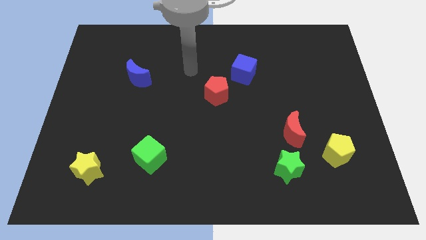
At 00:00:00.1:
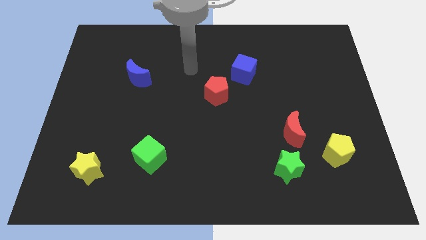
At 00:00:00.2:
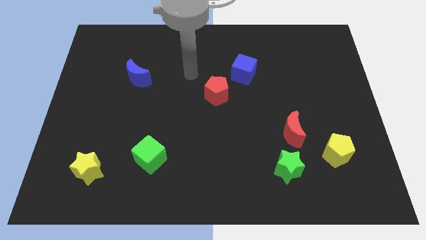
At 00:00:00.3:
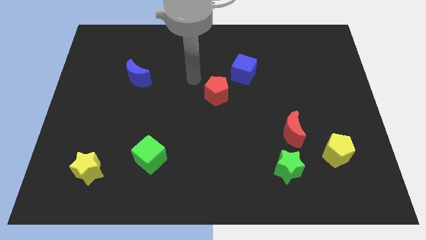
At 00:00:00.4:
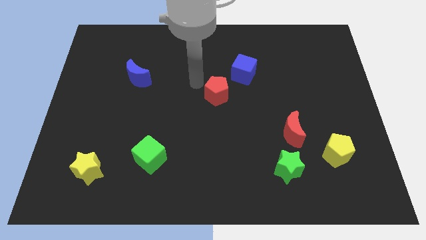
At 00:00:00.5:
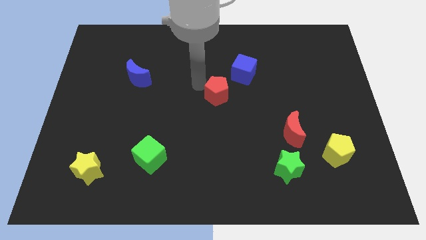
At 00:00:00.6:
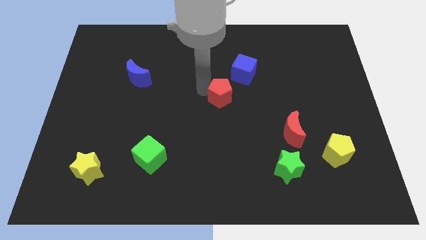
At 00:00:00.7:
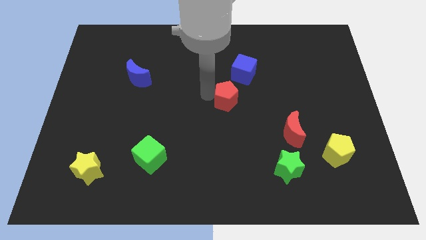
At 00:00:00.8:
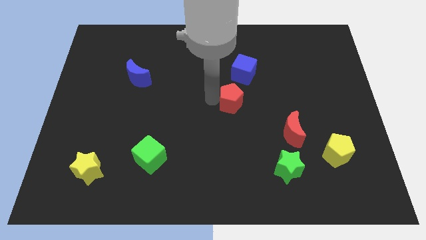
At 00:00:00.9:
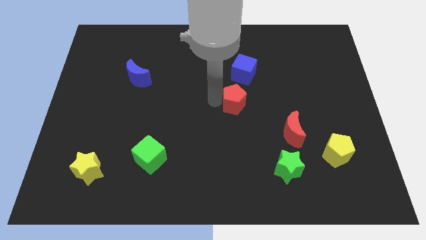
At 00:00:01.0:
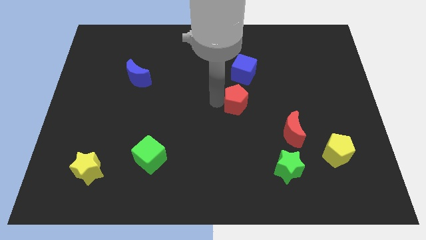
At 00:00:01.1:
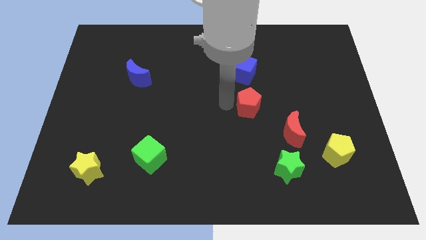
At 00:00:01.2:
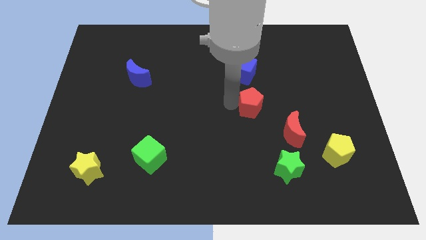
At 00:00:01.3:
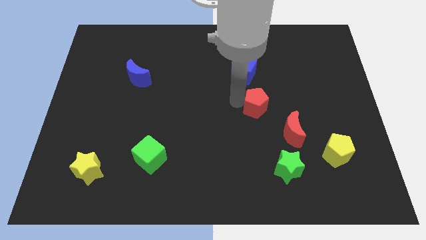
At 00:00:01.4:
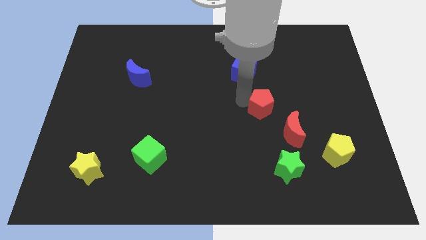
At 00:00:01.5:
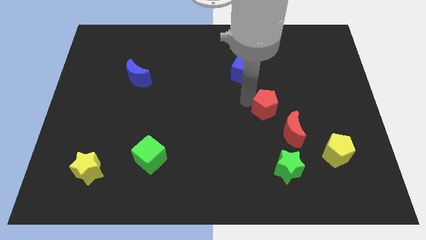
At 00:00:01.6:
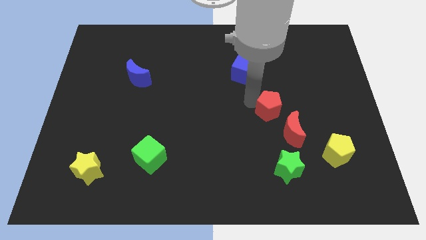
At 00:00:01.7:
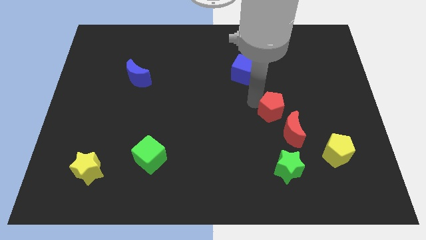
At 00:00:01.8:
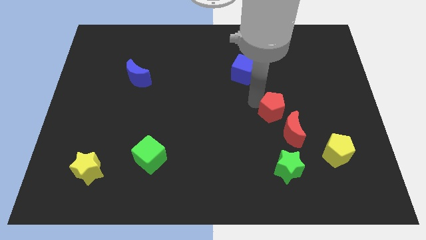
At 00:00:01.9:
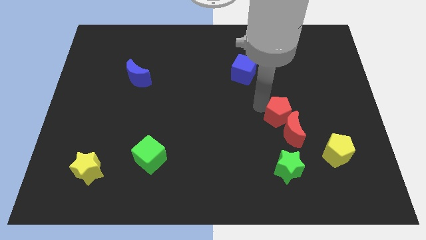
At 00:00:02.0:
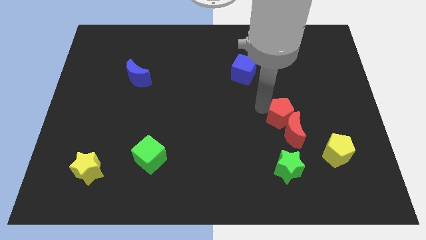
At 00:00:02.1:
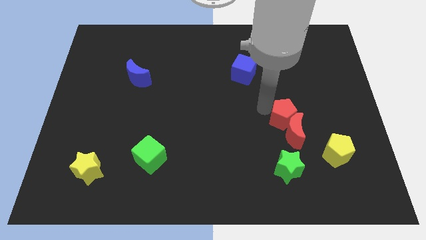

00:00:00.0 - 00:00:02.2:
put the red pentagon next to the red moon

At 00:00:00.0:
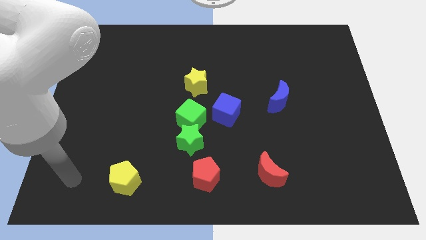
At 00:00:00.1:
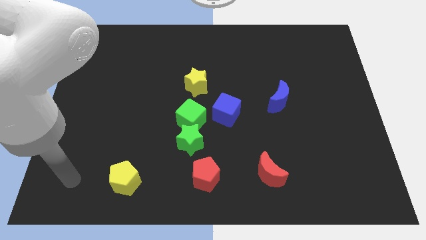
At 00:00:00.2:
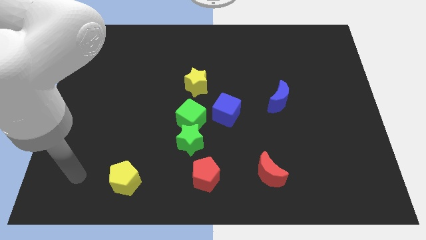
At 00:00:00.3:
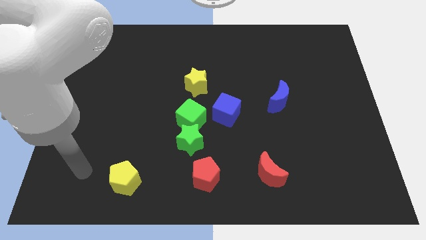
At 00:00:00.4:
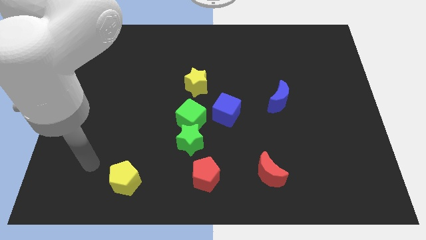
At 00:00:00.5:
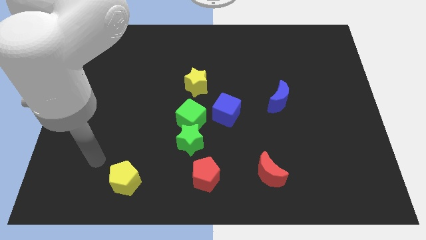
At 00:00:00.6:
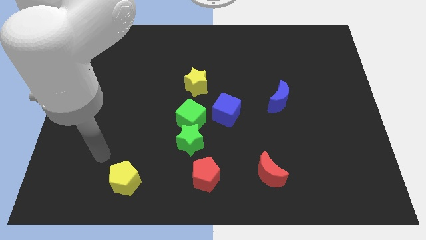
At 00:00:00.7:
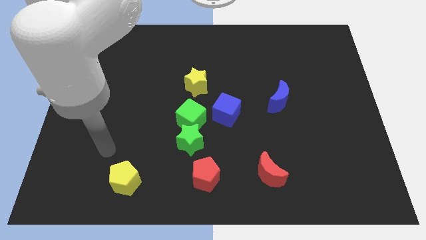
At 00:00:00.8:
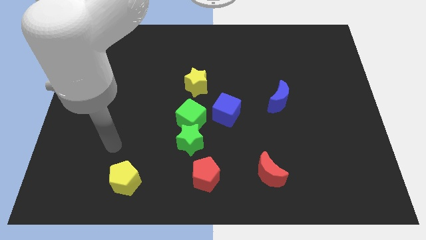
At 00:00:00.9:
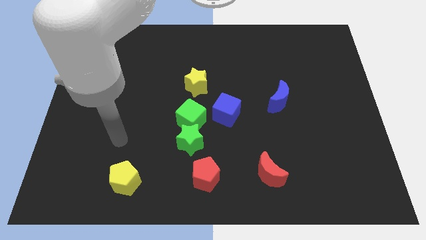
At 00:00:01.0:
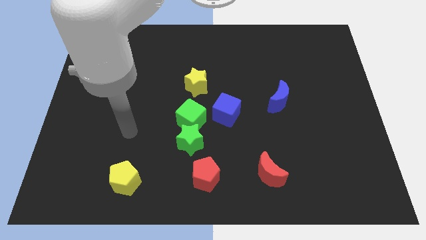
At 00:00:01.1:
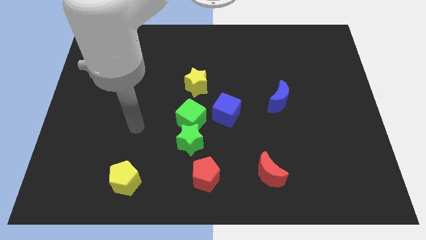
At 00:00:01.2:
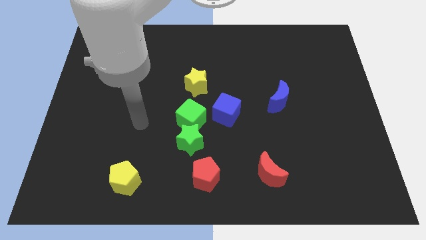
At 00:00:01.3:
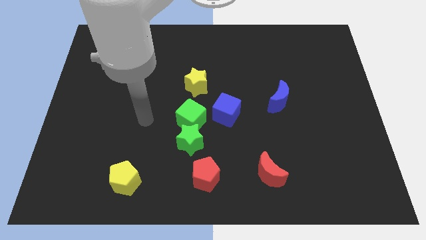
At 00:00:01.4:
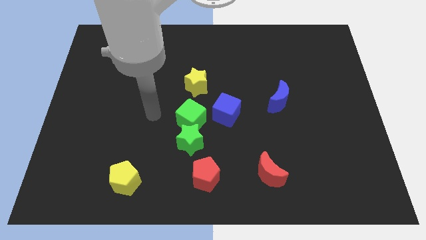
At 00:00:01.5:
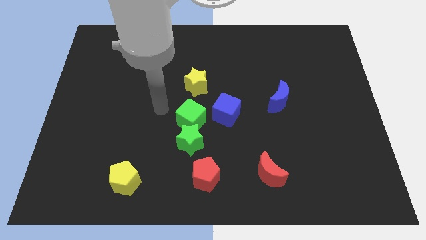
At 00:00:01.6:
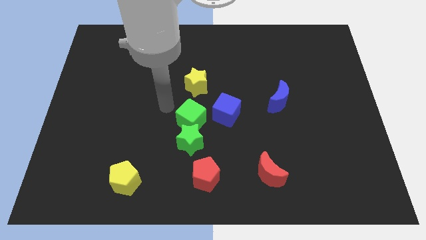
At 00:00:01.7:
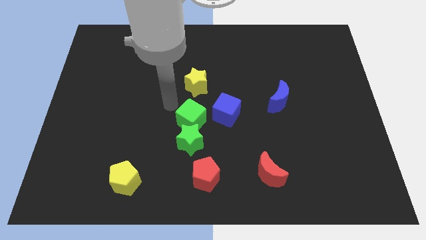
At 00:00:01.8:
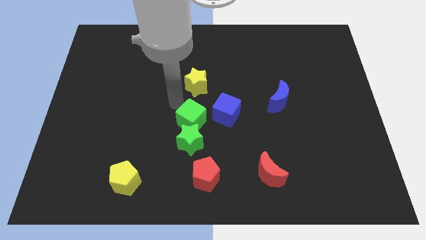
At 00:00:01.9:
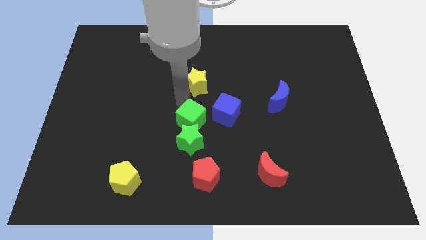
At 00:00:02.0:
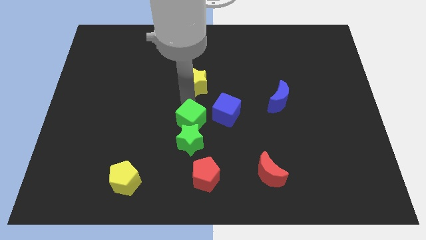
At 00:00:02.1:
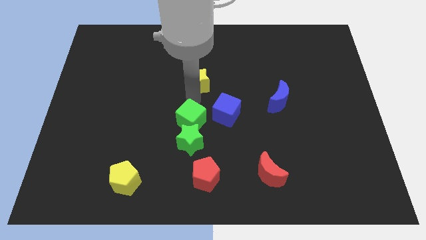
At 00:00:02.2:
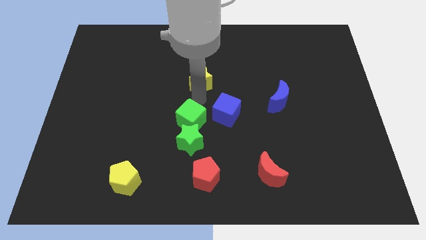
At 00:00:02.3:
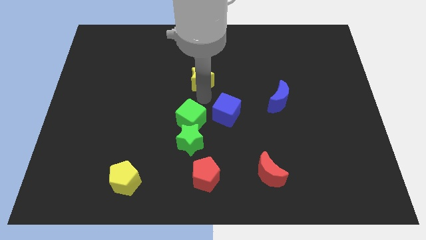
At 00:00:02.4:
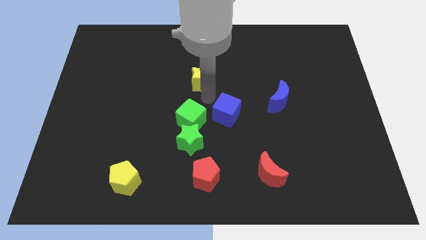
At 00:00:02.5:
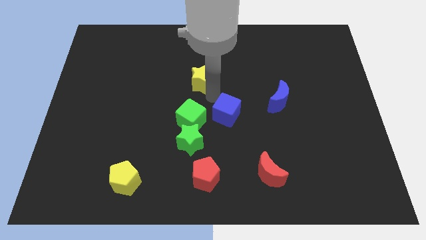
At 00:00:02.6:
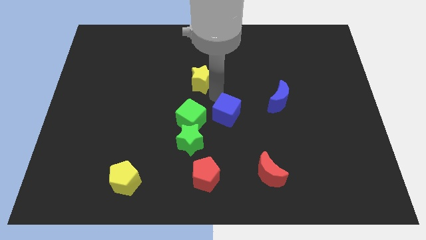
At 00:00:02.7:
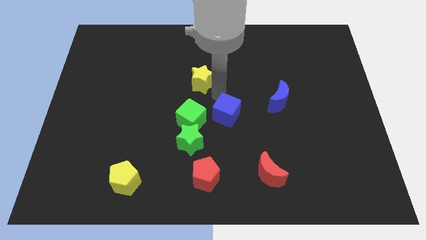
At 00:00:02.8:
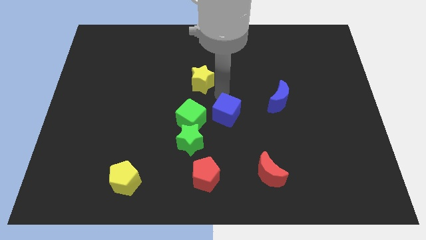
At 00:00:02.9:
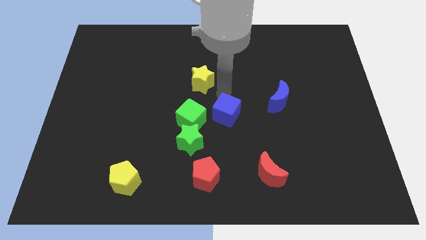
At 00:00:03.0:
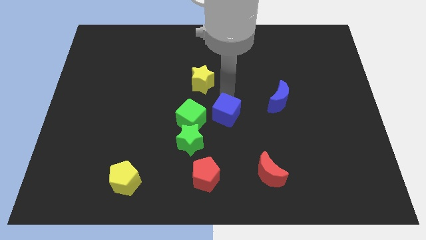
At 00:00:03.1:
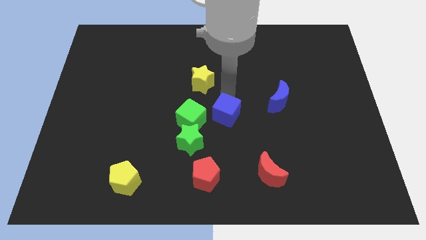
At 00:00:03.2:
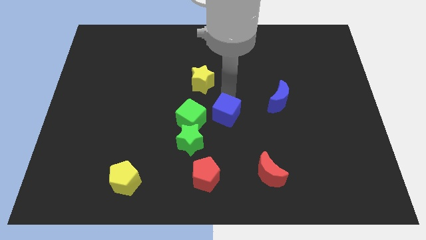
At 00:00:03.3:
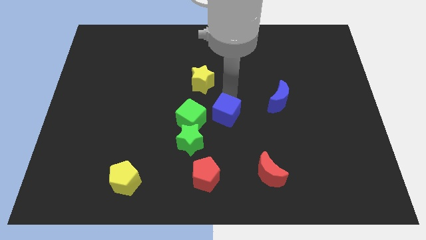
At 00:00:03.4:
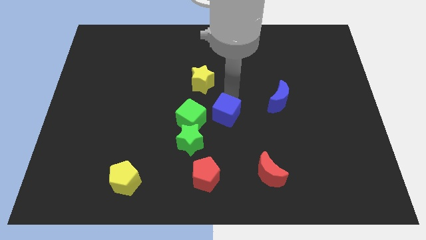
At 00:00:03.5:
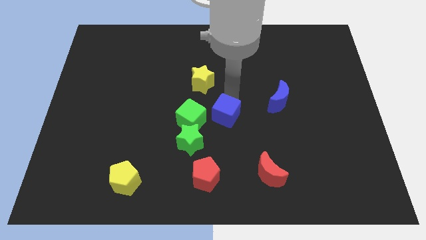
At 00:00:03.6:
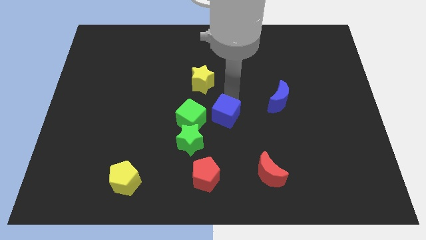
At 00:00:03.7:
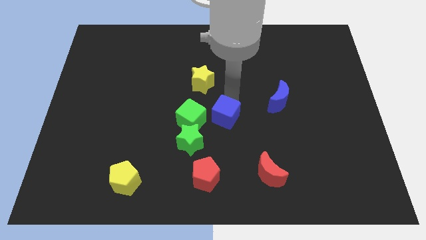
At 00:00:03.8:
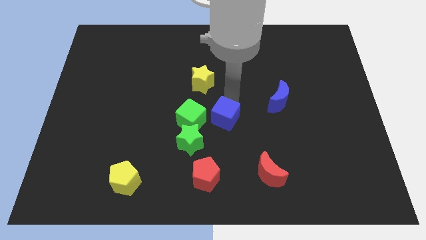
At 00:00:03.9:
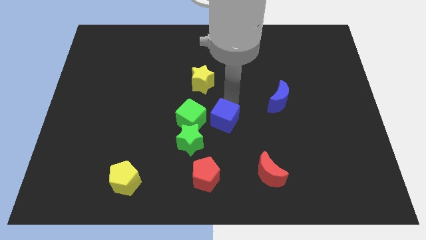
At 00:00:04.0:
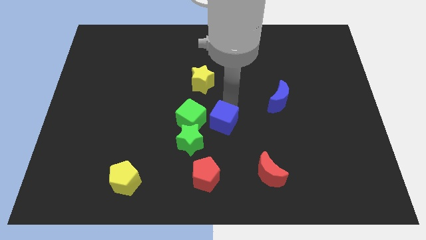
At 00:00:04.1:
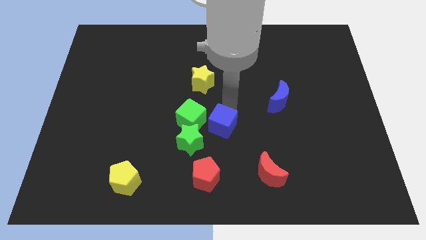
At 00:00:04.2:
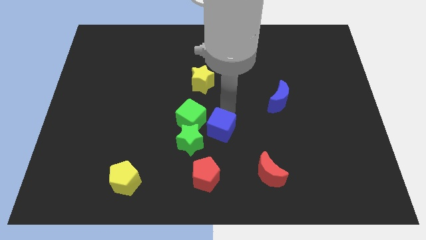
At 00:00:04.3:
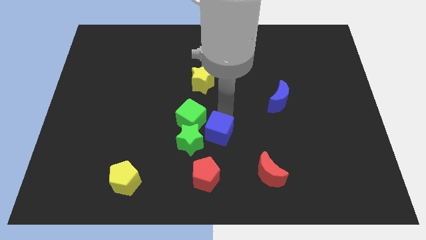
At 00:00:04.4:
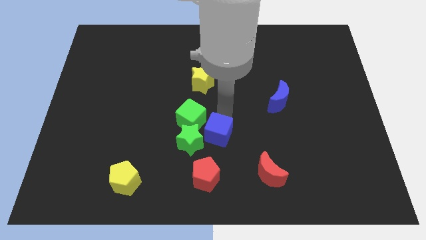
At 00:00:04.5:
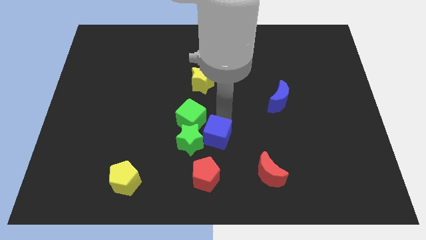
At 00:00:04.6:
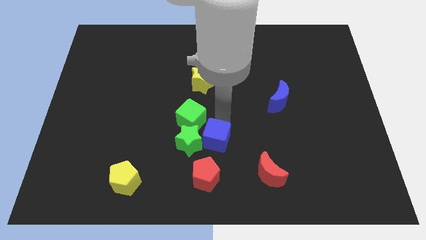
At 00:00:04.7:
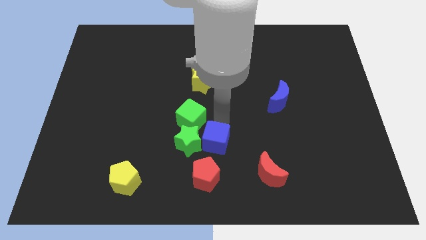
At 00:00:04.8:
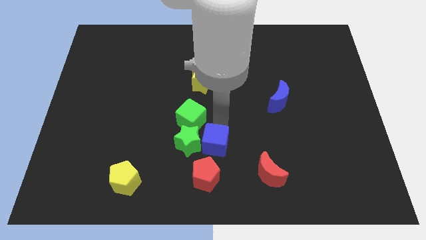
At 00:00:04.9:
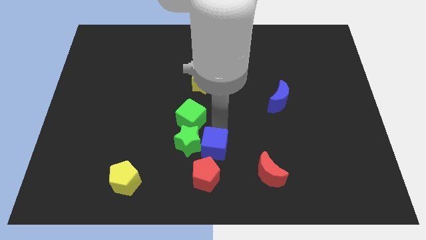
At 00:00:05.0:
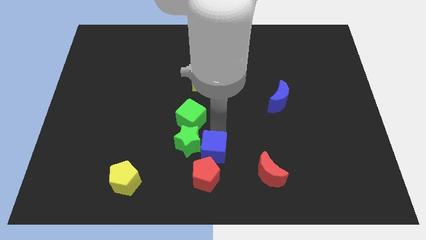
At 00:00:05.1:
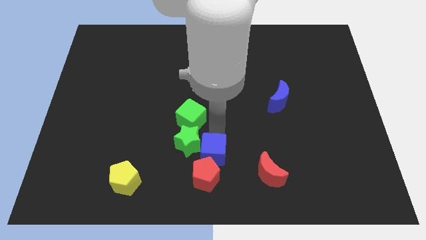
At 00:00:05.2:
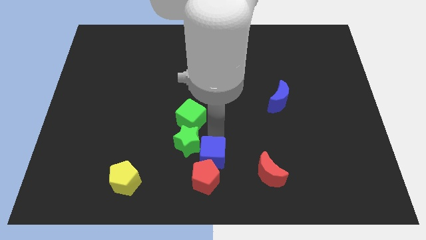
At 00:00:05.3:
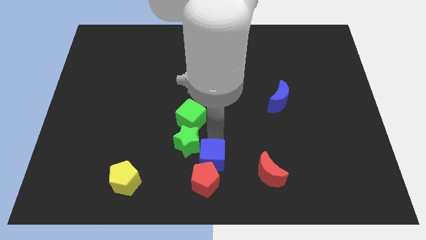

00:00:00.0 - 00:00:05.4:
push the blue cube close to the red pentagon

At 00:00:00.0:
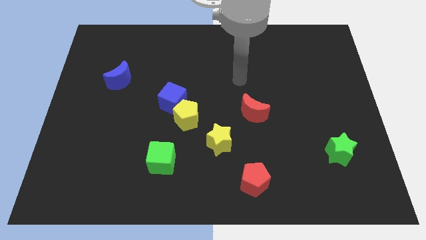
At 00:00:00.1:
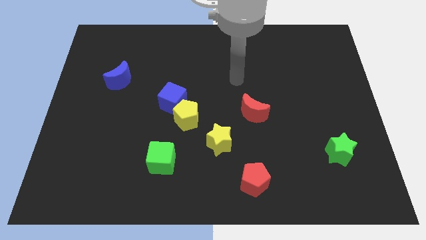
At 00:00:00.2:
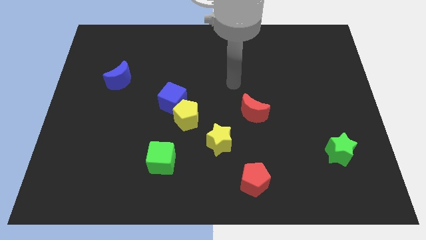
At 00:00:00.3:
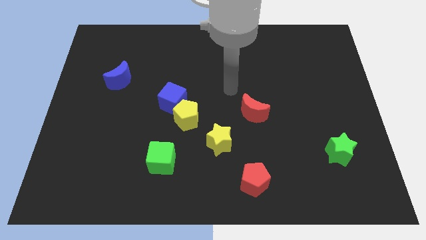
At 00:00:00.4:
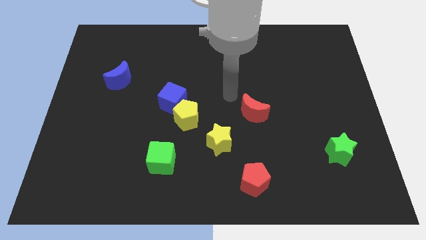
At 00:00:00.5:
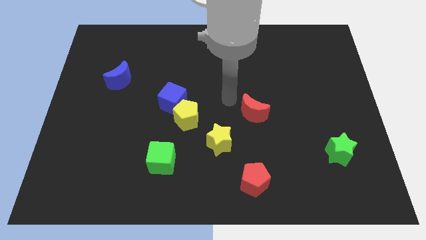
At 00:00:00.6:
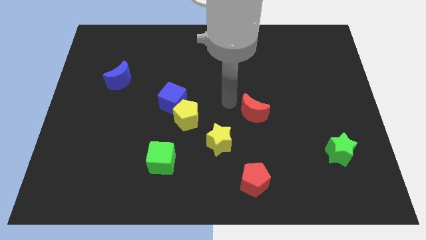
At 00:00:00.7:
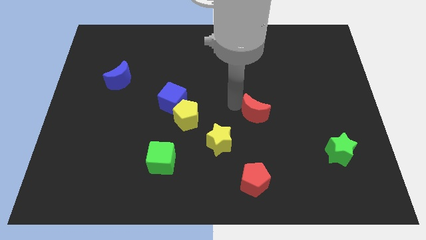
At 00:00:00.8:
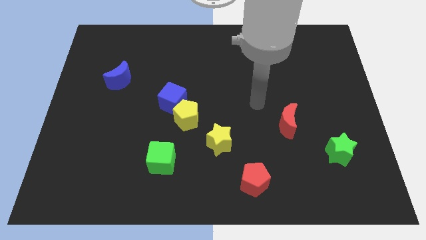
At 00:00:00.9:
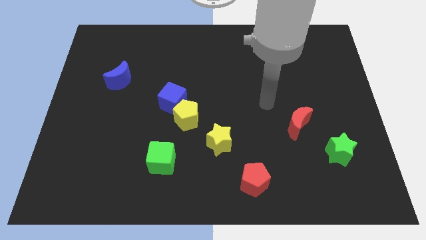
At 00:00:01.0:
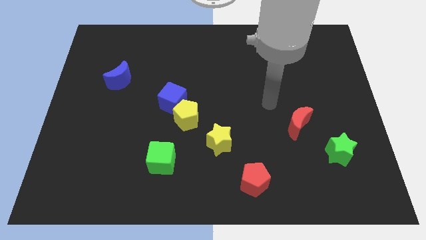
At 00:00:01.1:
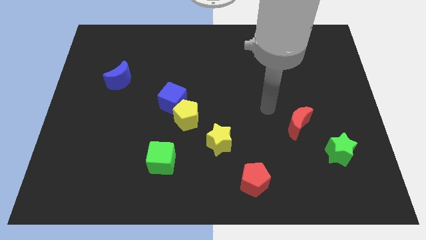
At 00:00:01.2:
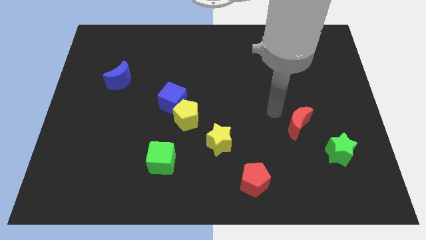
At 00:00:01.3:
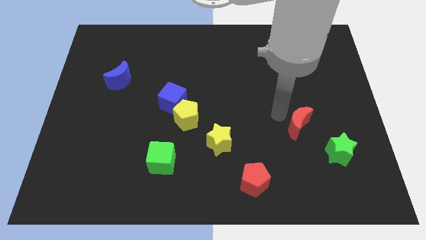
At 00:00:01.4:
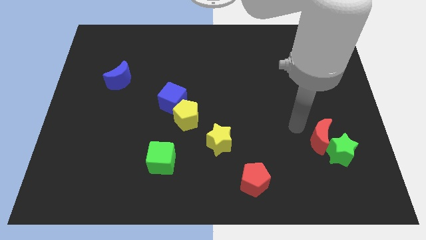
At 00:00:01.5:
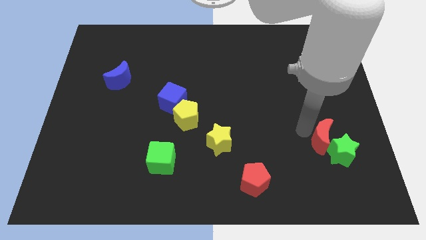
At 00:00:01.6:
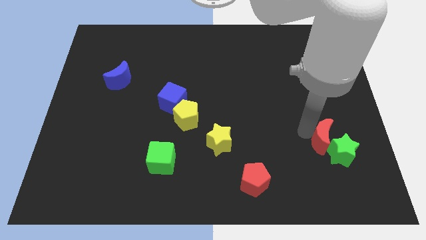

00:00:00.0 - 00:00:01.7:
slide the red moon next to the green star
